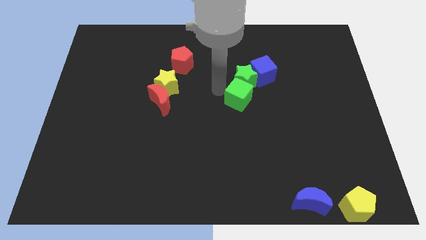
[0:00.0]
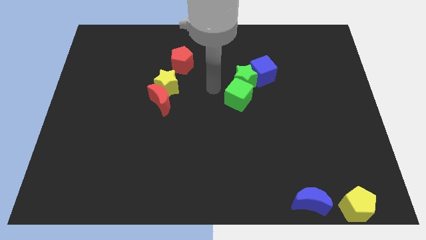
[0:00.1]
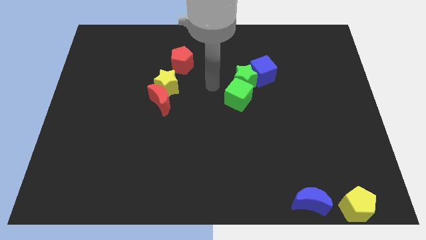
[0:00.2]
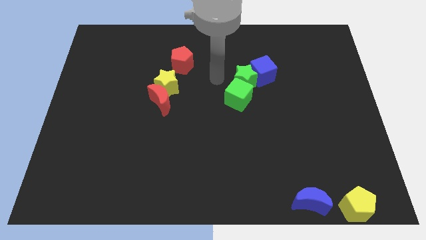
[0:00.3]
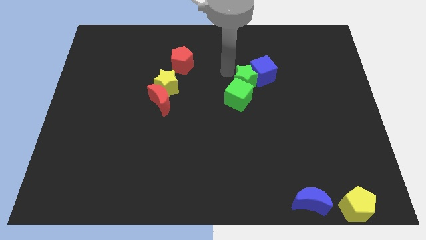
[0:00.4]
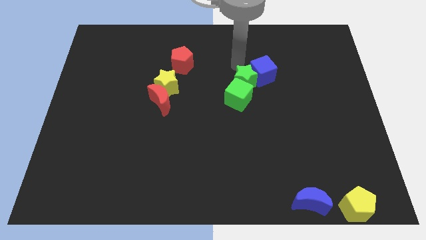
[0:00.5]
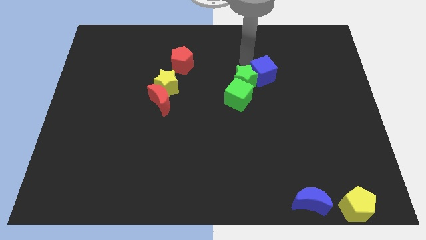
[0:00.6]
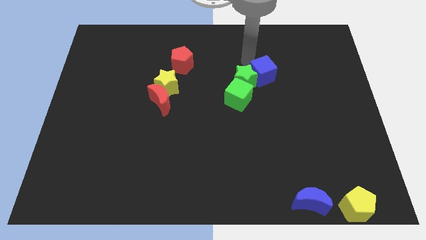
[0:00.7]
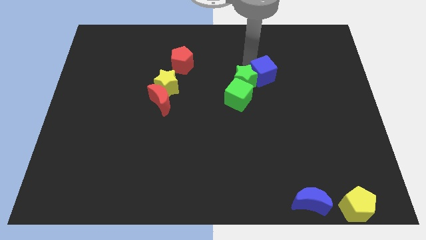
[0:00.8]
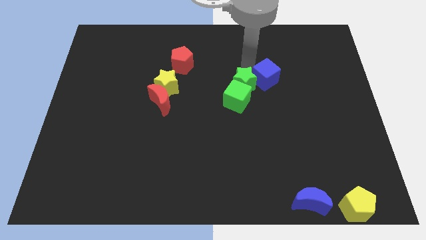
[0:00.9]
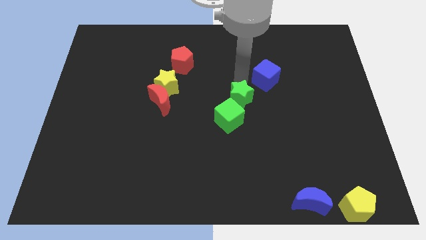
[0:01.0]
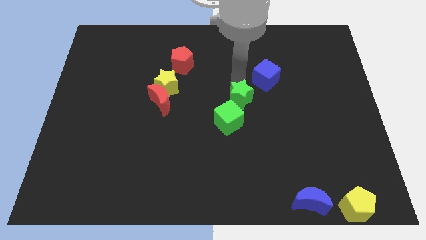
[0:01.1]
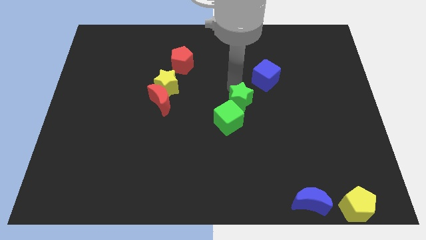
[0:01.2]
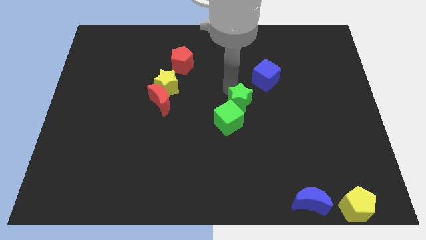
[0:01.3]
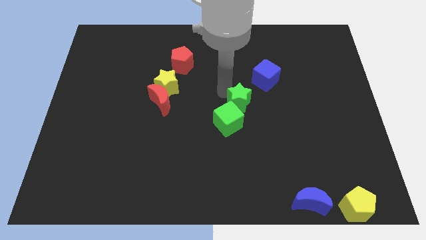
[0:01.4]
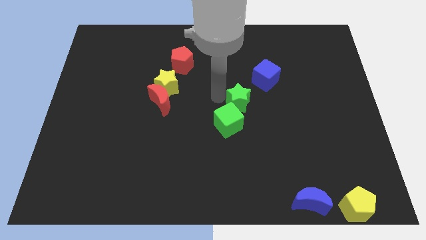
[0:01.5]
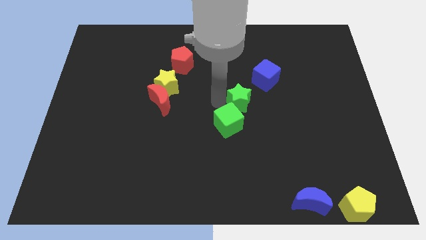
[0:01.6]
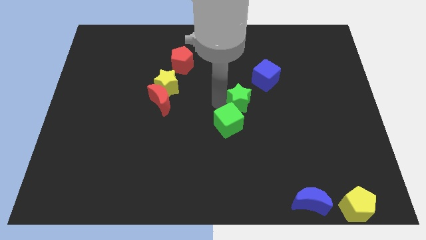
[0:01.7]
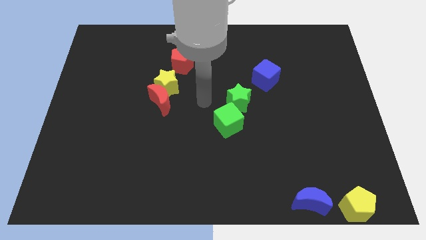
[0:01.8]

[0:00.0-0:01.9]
separate green star and the green cube from the blue cube

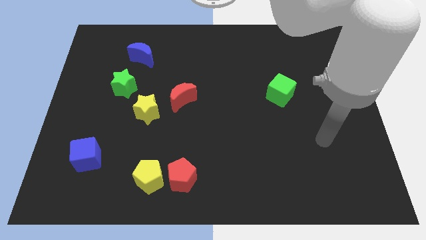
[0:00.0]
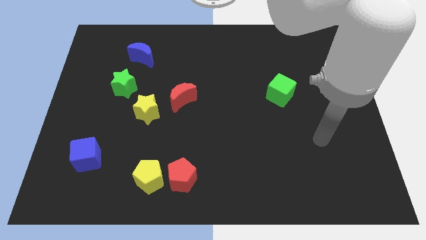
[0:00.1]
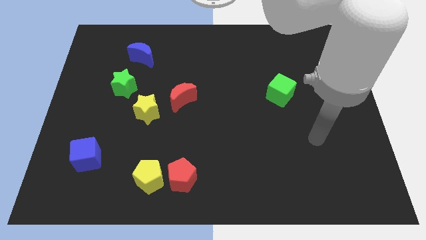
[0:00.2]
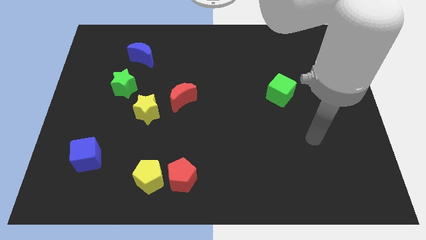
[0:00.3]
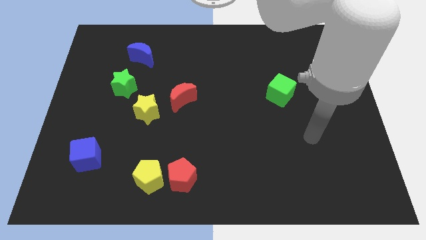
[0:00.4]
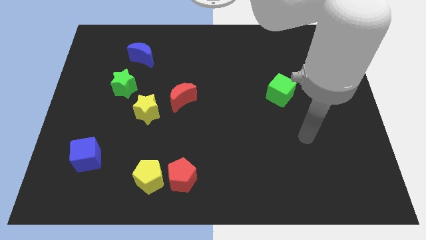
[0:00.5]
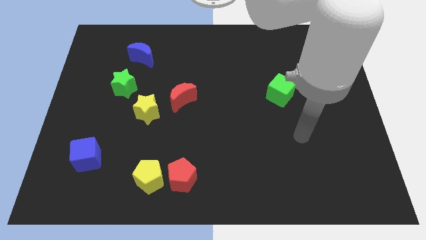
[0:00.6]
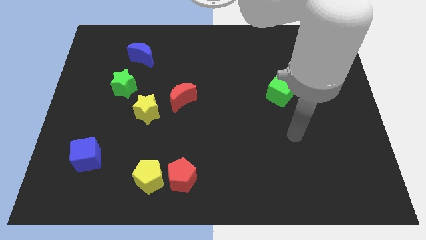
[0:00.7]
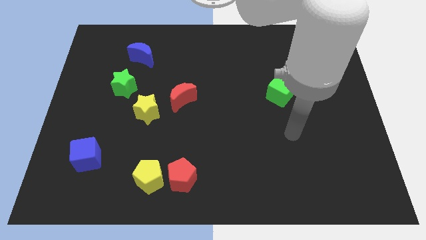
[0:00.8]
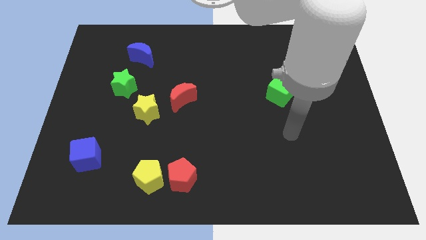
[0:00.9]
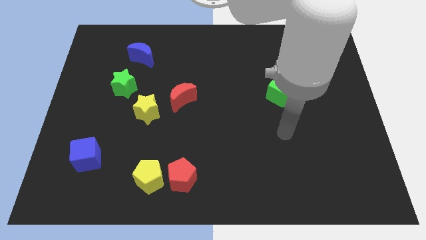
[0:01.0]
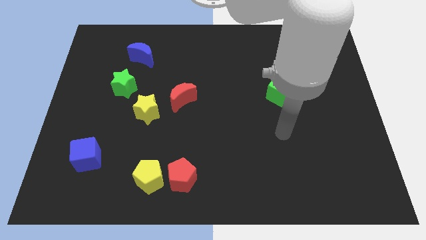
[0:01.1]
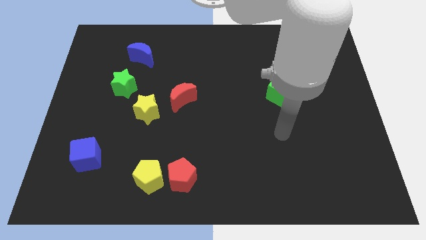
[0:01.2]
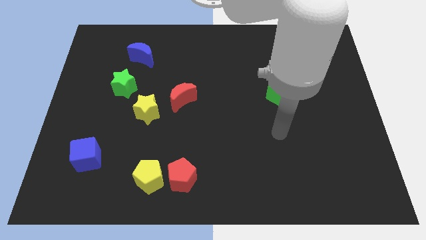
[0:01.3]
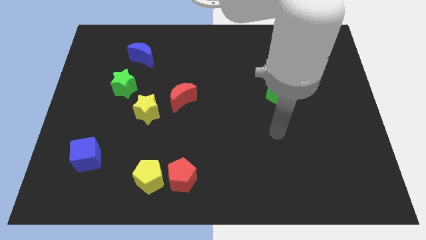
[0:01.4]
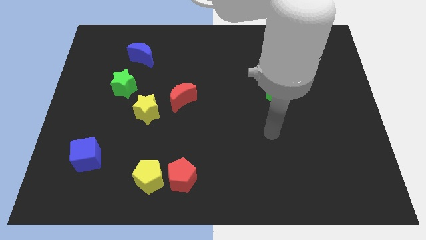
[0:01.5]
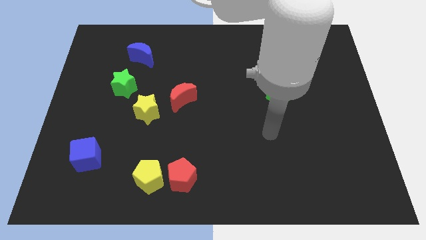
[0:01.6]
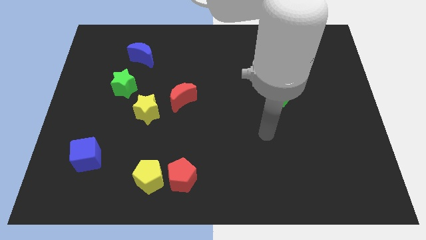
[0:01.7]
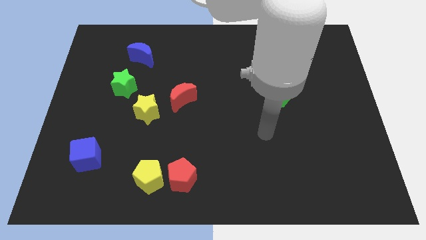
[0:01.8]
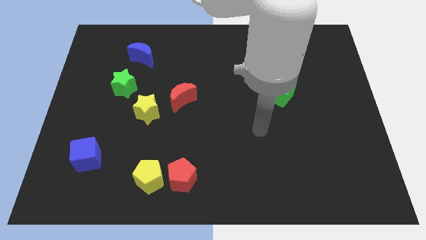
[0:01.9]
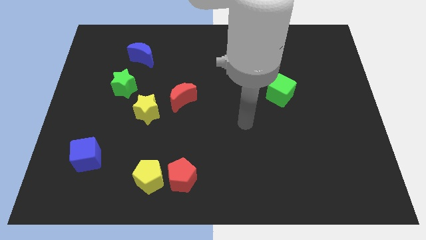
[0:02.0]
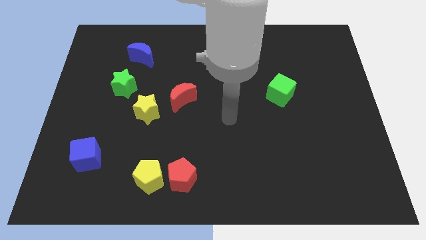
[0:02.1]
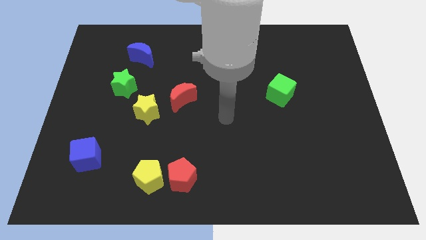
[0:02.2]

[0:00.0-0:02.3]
move your arm towards the center of the board

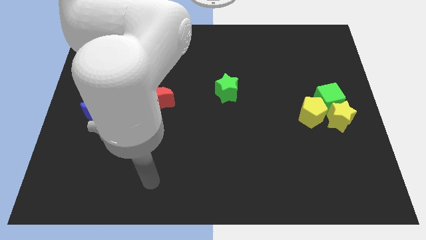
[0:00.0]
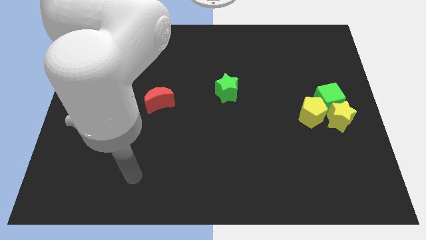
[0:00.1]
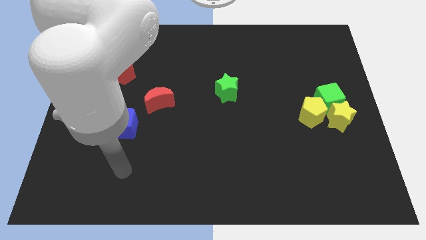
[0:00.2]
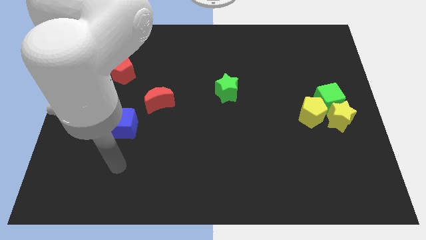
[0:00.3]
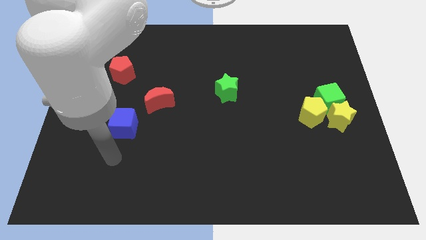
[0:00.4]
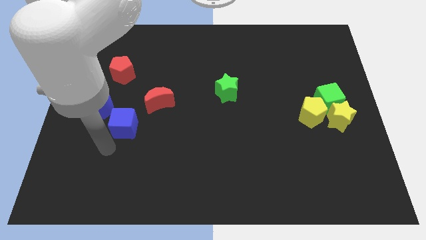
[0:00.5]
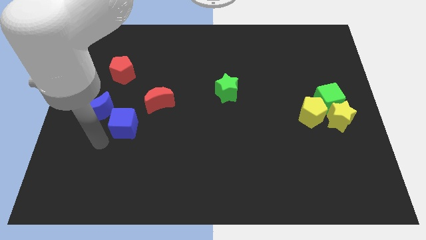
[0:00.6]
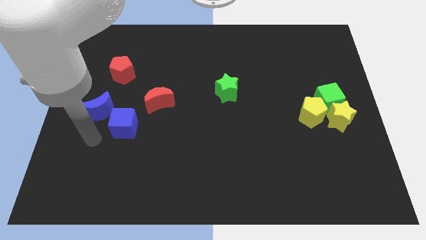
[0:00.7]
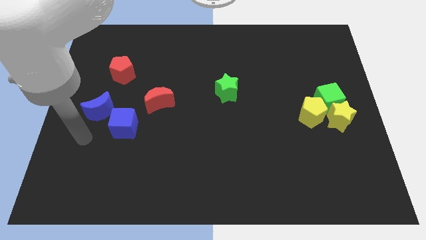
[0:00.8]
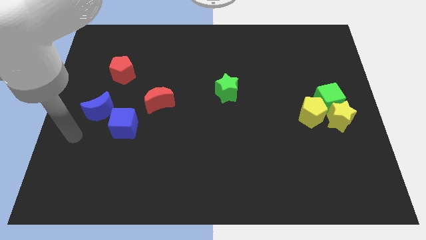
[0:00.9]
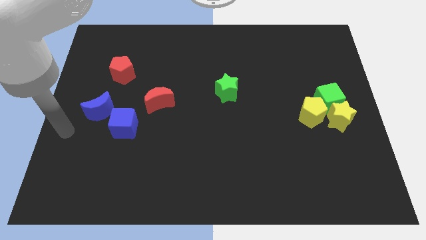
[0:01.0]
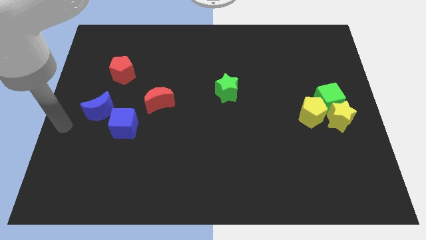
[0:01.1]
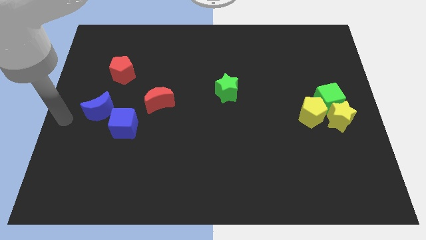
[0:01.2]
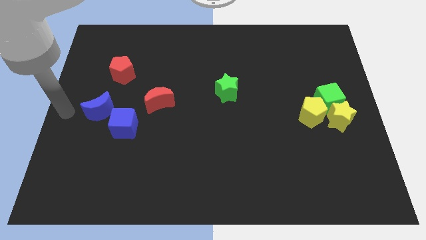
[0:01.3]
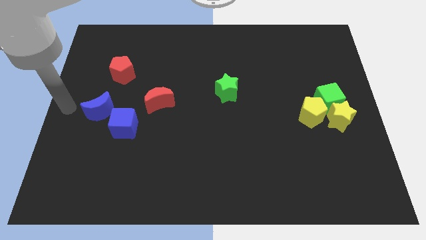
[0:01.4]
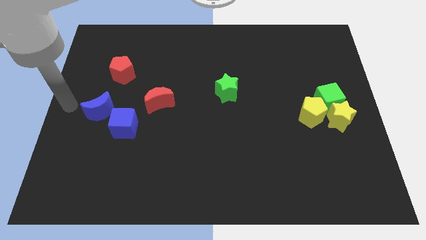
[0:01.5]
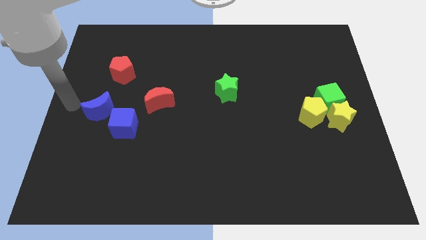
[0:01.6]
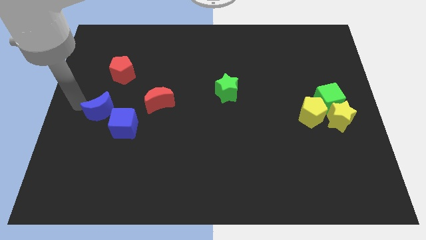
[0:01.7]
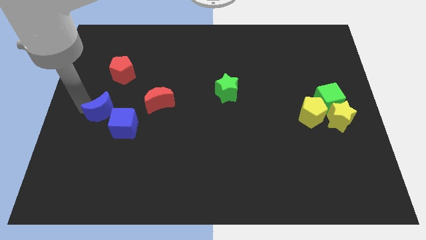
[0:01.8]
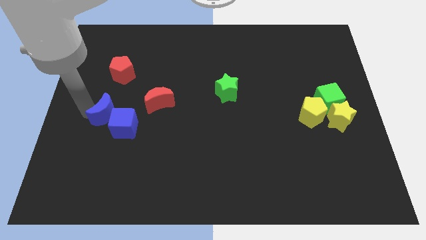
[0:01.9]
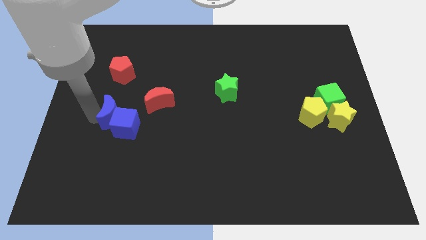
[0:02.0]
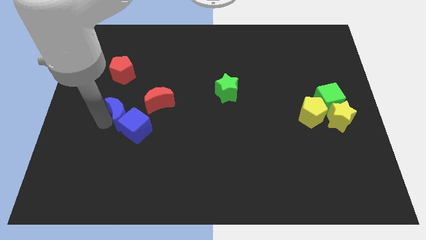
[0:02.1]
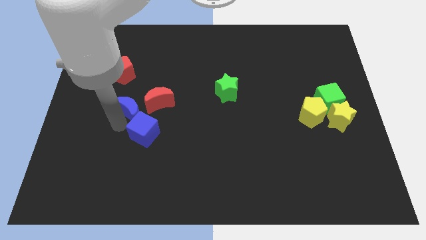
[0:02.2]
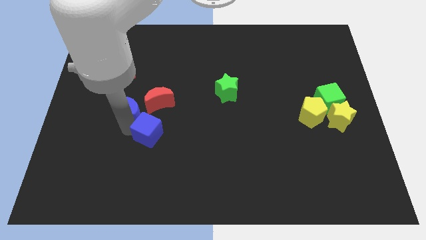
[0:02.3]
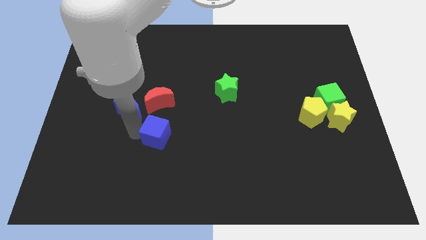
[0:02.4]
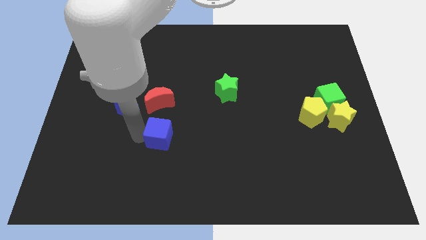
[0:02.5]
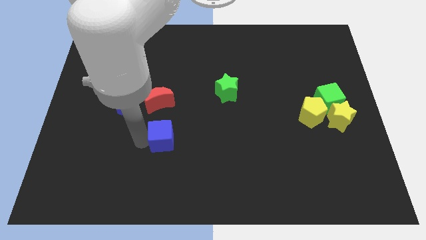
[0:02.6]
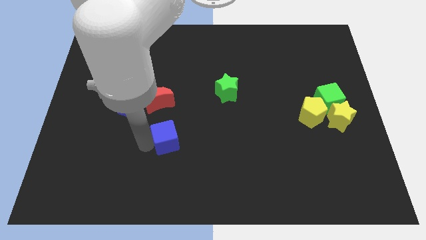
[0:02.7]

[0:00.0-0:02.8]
separate blue moon and blue cube

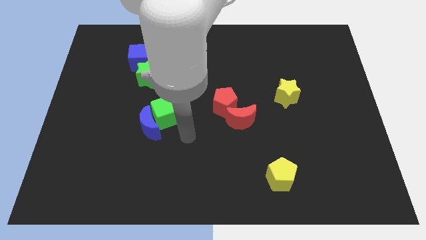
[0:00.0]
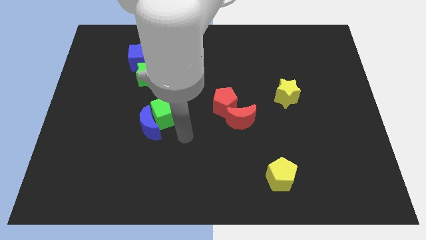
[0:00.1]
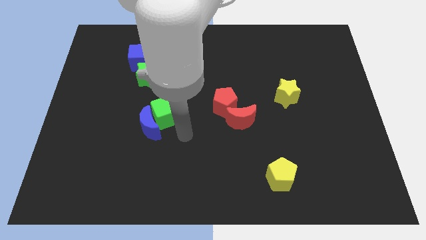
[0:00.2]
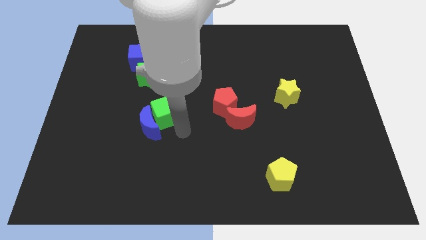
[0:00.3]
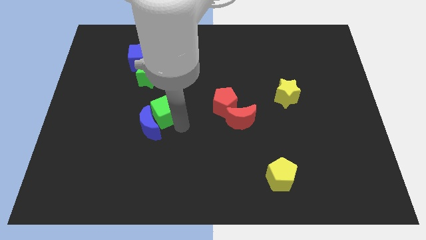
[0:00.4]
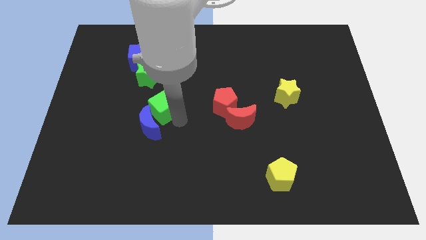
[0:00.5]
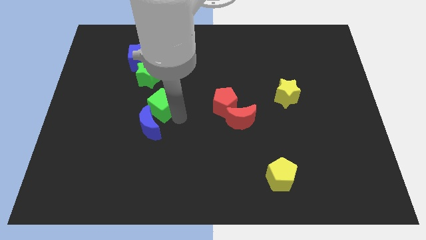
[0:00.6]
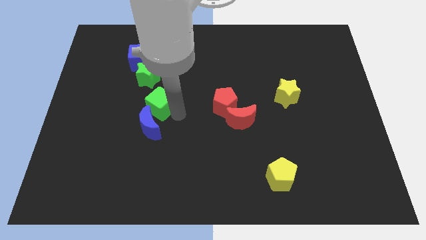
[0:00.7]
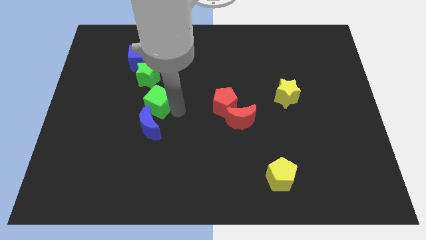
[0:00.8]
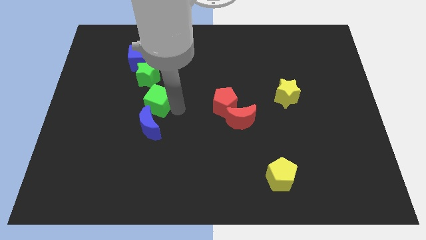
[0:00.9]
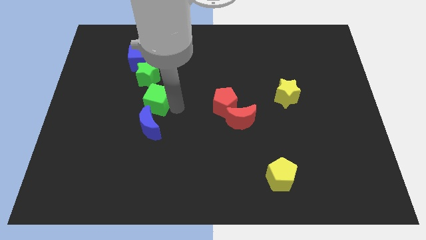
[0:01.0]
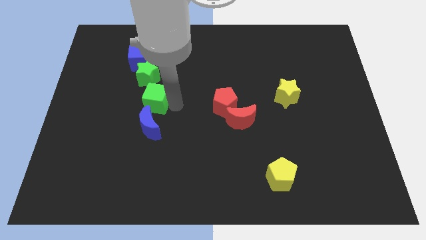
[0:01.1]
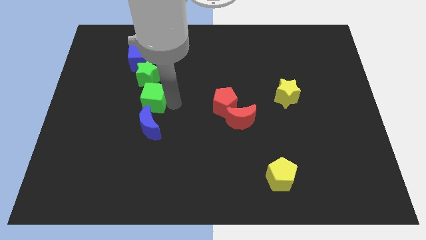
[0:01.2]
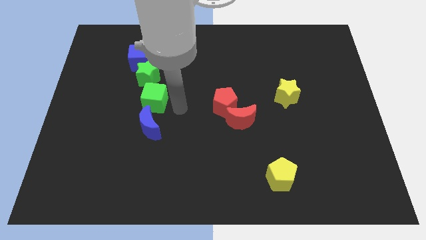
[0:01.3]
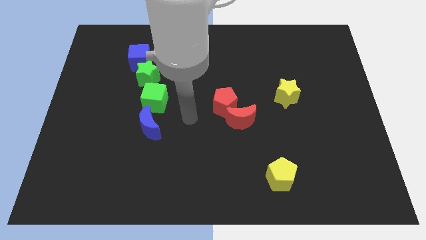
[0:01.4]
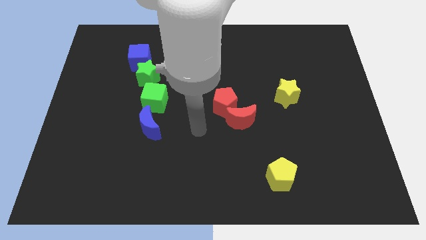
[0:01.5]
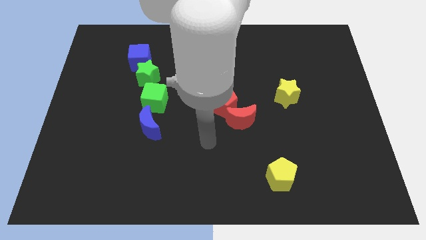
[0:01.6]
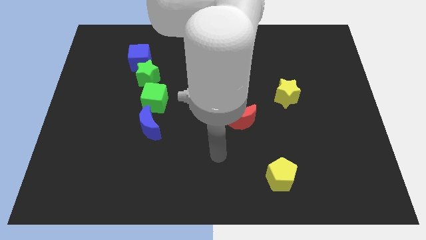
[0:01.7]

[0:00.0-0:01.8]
place the green cube in between the green star and blue moon

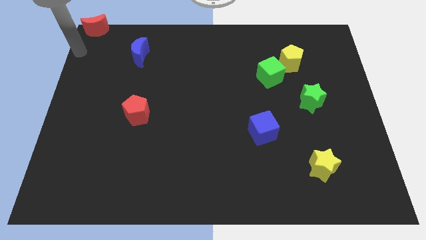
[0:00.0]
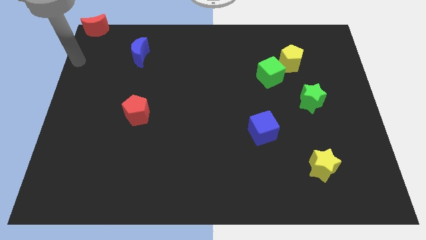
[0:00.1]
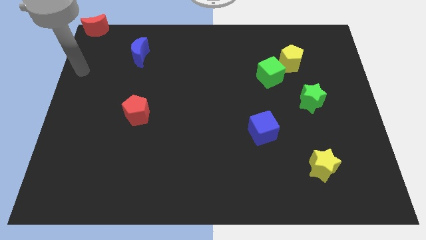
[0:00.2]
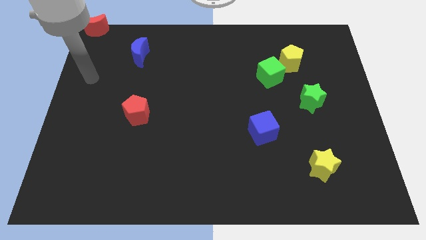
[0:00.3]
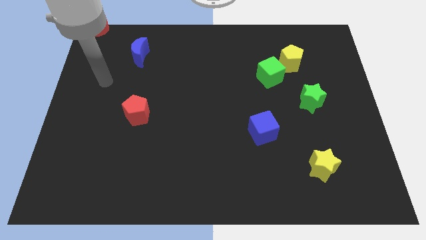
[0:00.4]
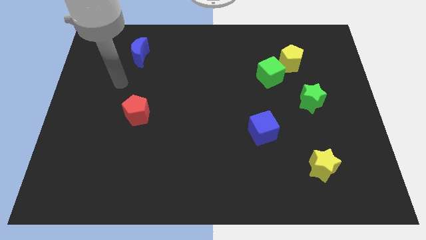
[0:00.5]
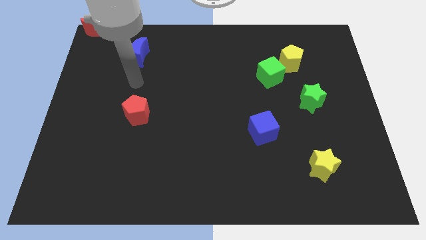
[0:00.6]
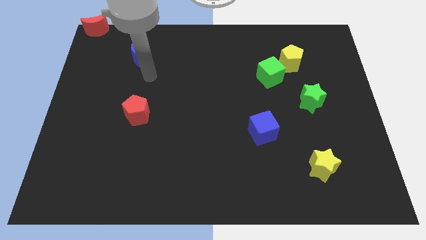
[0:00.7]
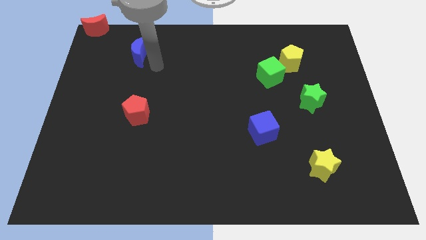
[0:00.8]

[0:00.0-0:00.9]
move your arm towards blue crescent
